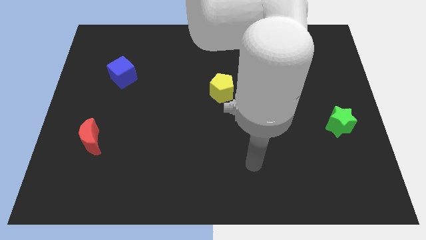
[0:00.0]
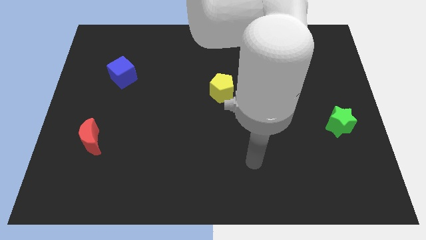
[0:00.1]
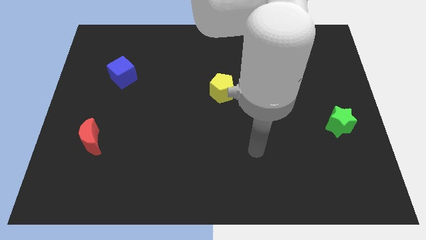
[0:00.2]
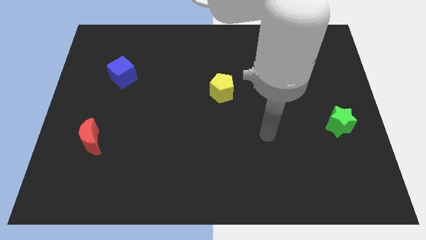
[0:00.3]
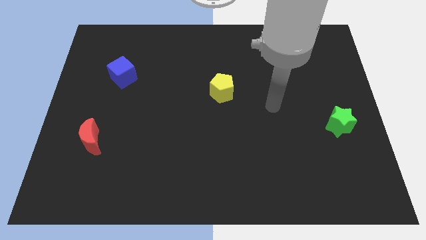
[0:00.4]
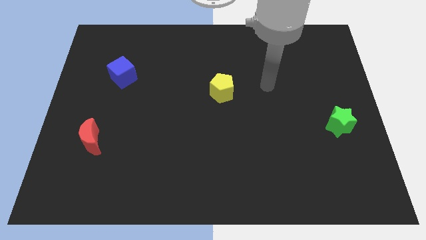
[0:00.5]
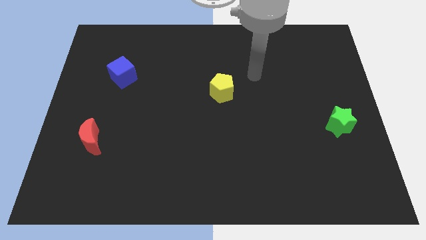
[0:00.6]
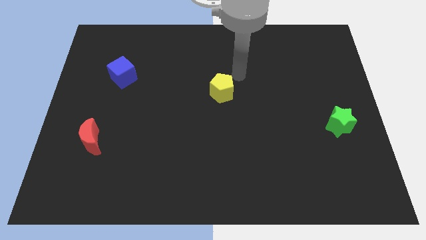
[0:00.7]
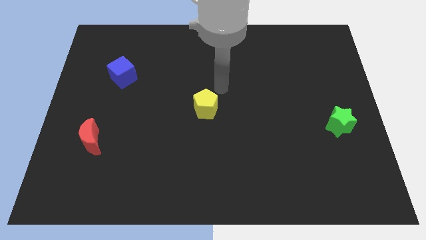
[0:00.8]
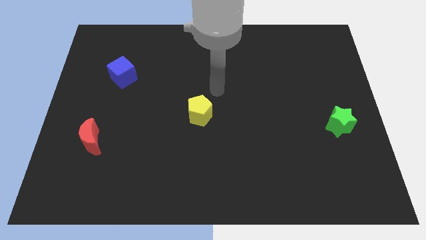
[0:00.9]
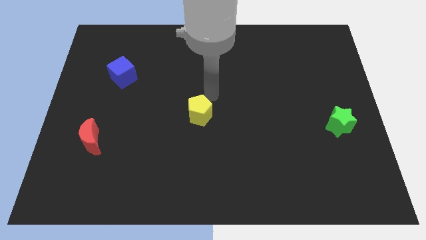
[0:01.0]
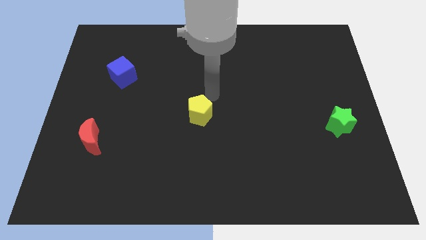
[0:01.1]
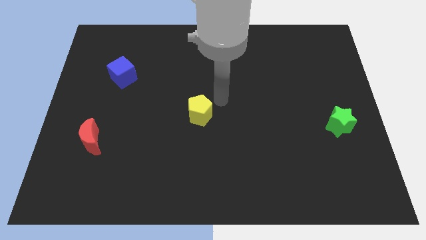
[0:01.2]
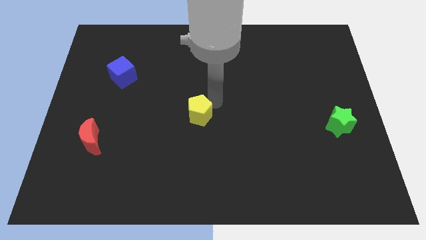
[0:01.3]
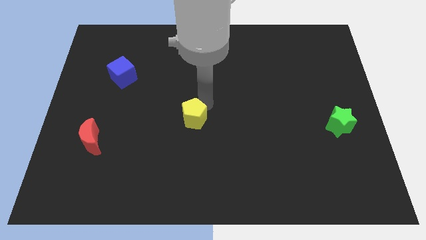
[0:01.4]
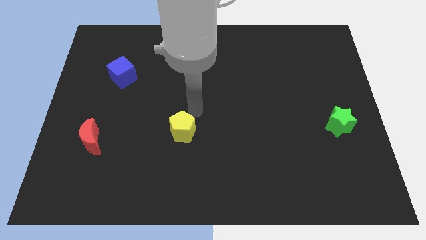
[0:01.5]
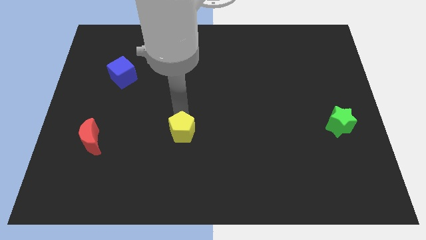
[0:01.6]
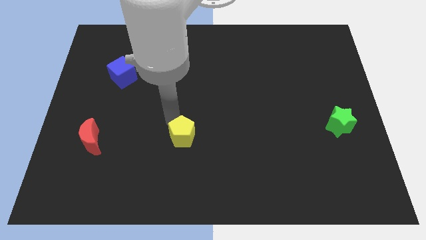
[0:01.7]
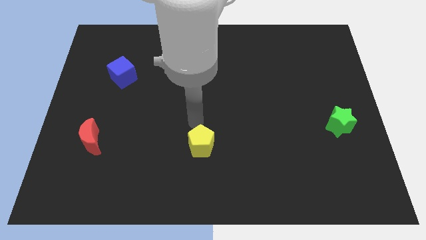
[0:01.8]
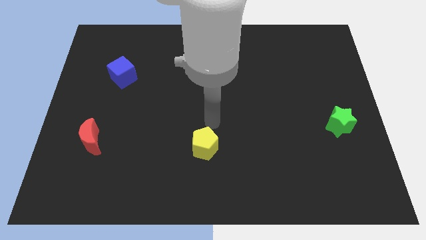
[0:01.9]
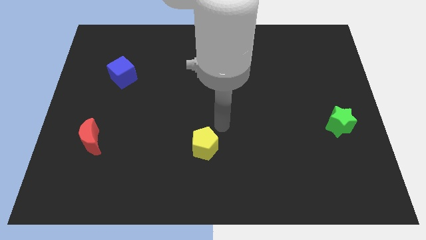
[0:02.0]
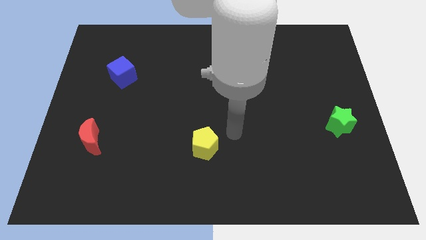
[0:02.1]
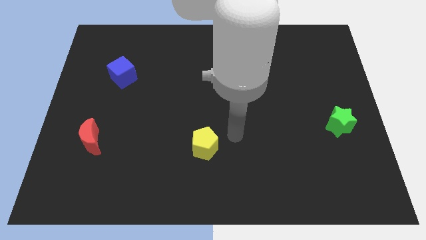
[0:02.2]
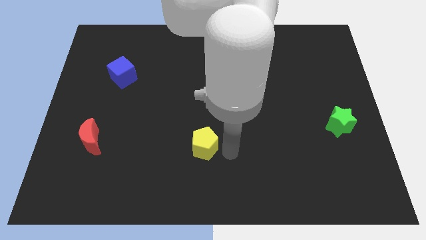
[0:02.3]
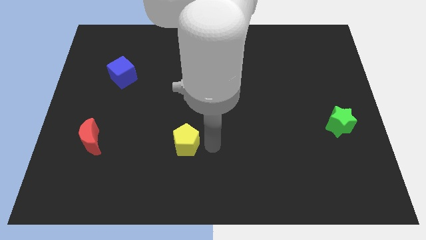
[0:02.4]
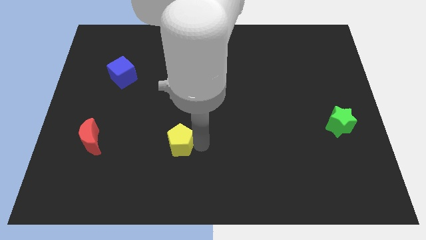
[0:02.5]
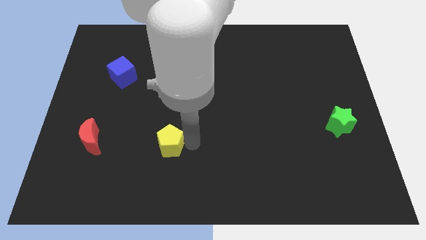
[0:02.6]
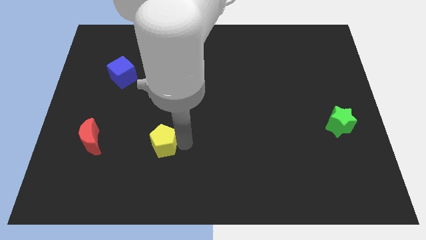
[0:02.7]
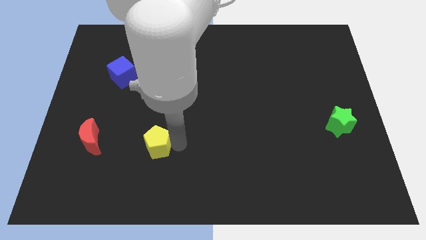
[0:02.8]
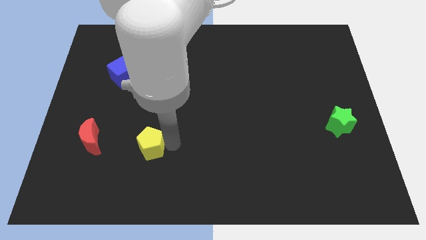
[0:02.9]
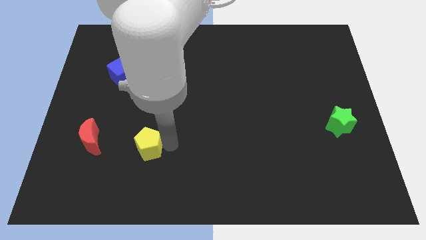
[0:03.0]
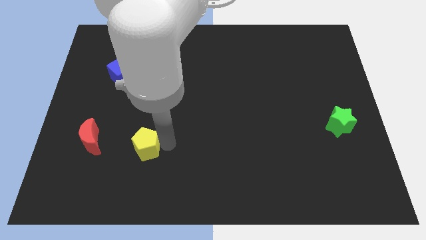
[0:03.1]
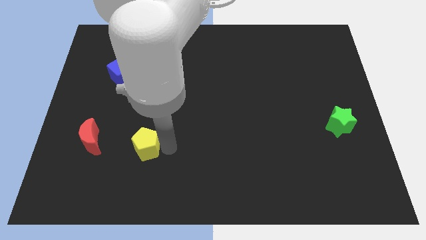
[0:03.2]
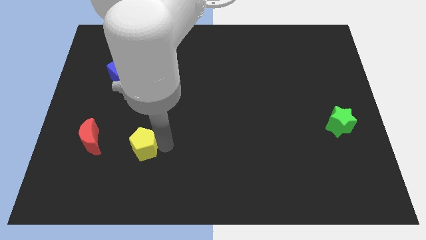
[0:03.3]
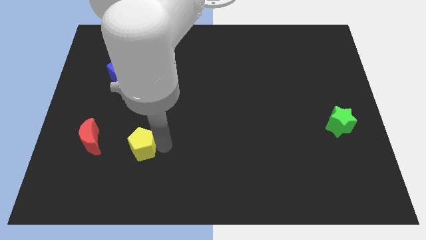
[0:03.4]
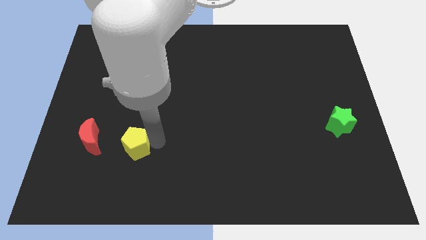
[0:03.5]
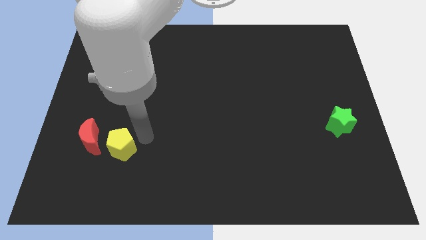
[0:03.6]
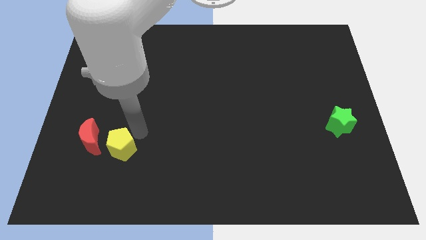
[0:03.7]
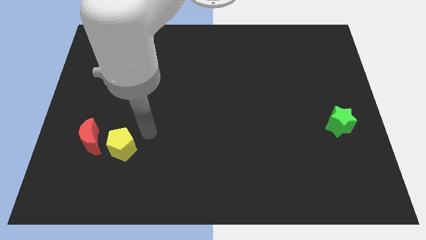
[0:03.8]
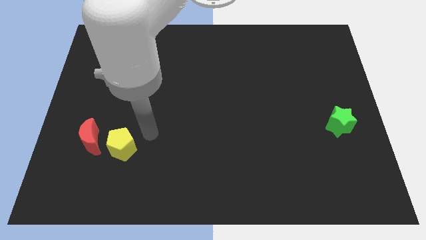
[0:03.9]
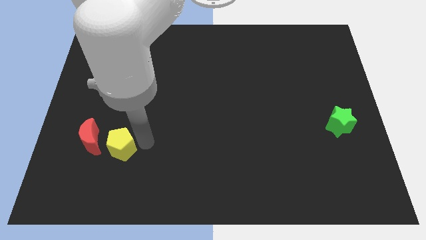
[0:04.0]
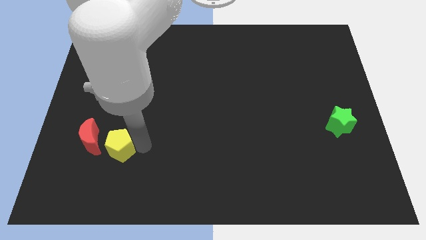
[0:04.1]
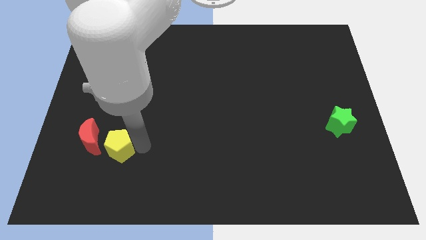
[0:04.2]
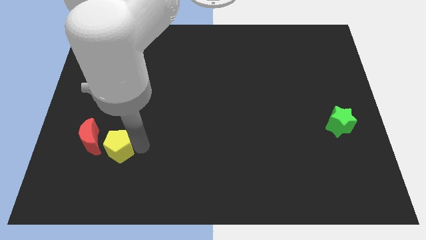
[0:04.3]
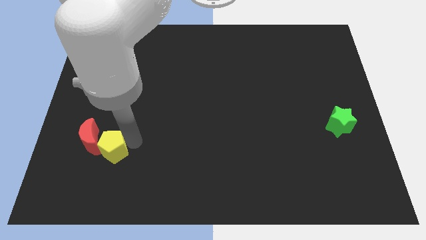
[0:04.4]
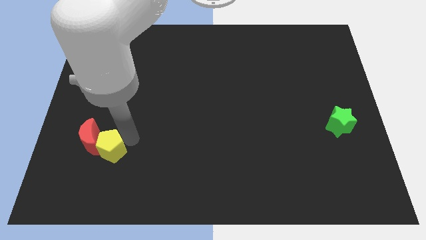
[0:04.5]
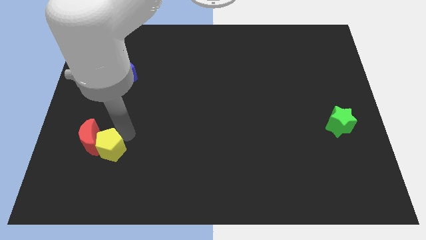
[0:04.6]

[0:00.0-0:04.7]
move the yellow block to the moon

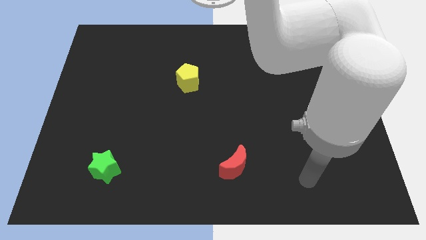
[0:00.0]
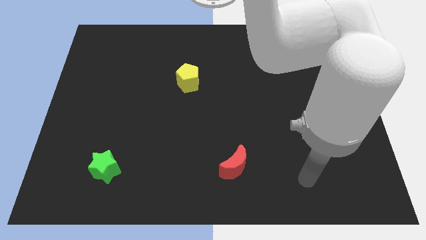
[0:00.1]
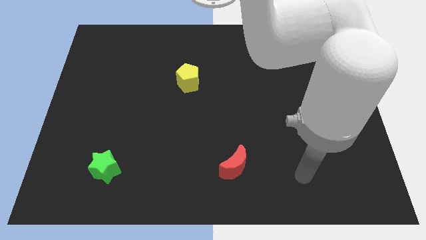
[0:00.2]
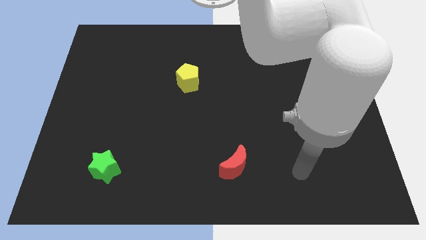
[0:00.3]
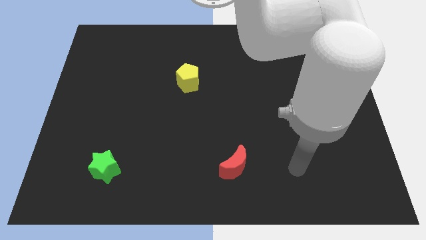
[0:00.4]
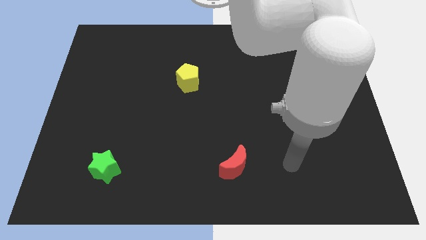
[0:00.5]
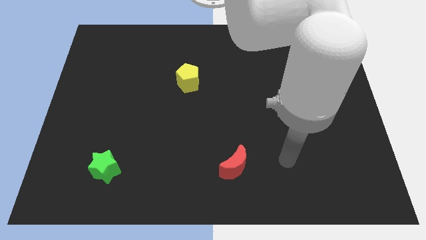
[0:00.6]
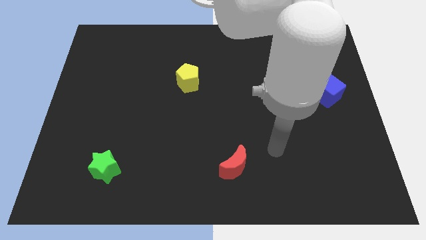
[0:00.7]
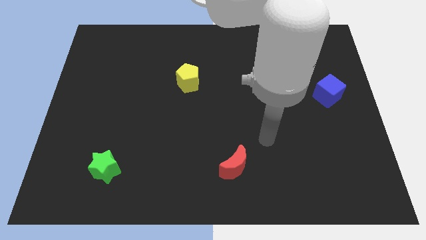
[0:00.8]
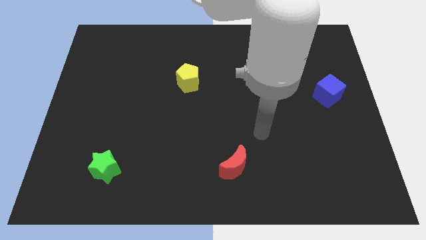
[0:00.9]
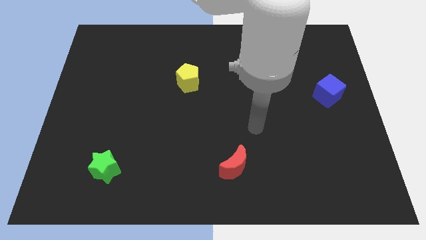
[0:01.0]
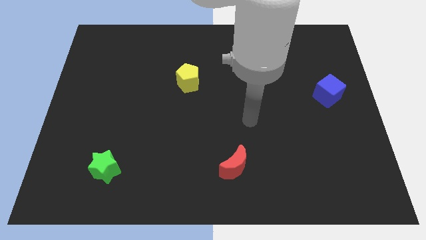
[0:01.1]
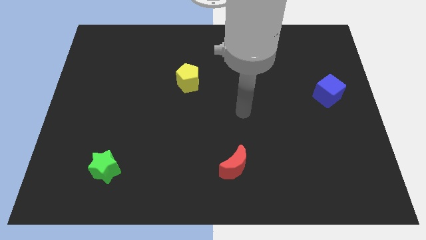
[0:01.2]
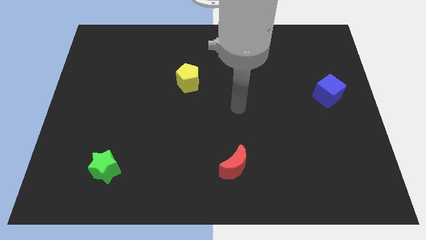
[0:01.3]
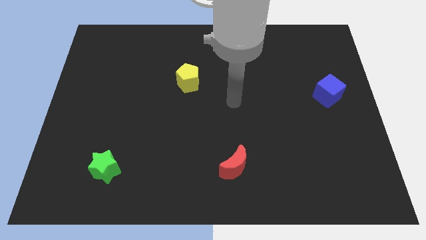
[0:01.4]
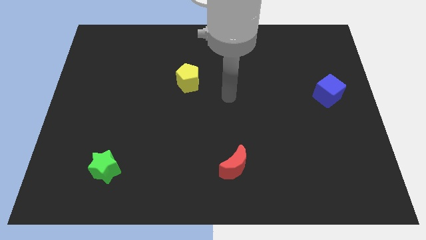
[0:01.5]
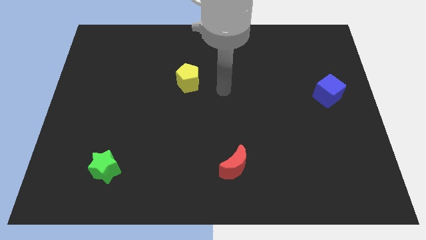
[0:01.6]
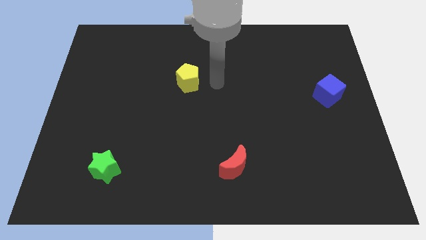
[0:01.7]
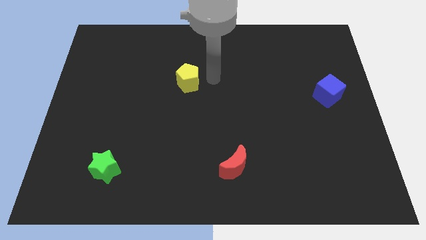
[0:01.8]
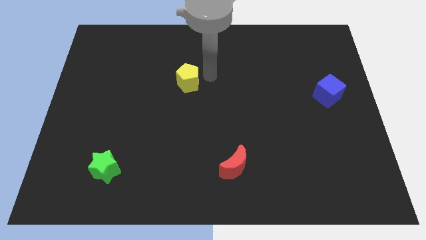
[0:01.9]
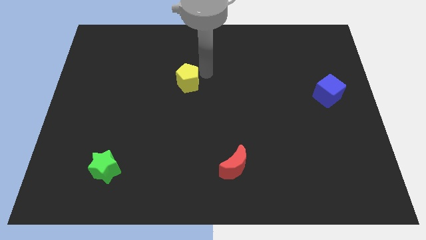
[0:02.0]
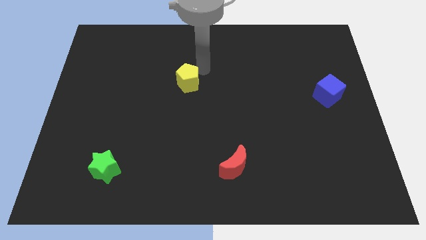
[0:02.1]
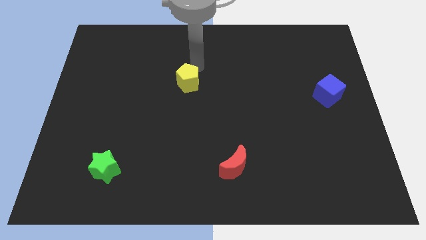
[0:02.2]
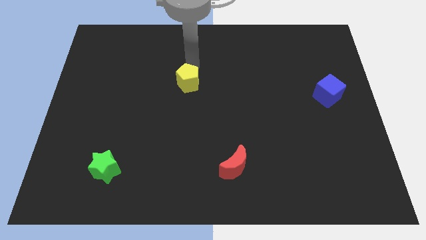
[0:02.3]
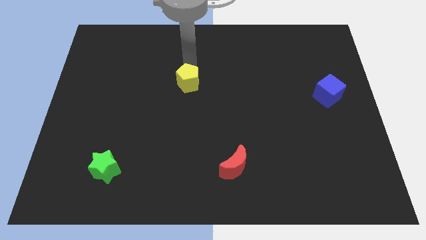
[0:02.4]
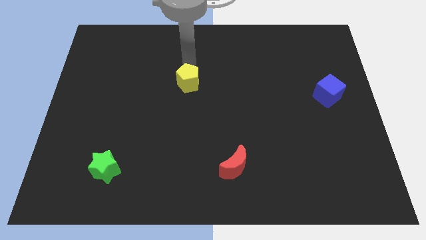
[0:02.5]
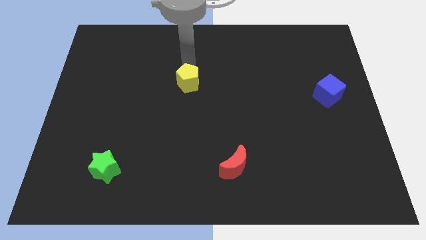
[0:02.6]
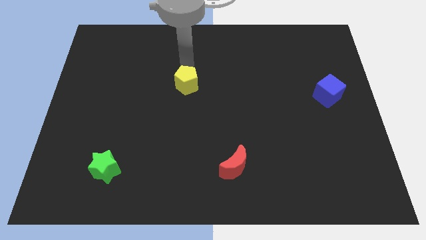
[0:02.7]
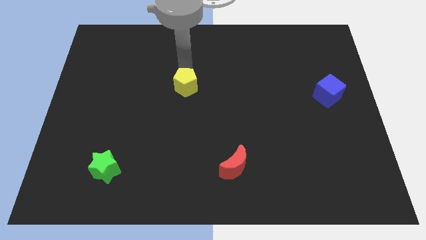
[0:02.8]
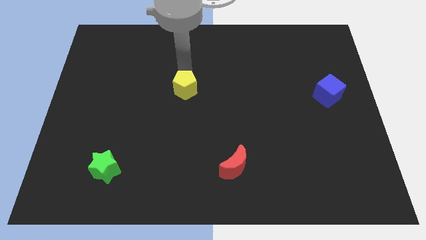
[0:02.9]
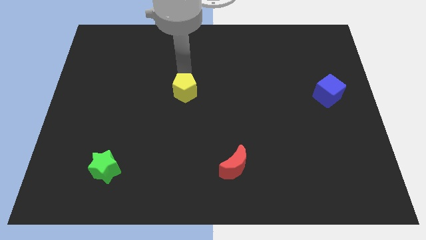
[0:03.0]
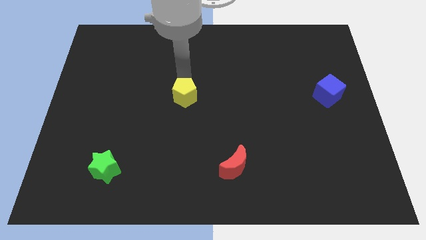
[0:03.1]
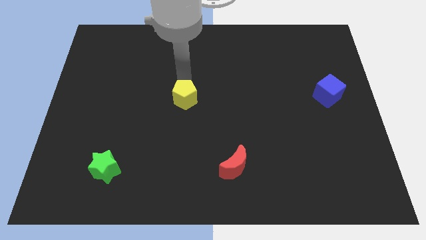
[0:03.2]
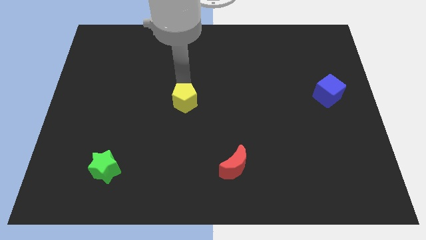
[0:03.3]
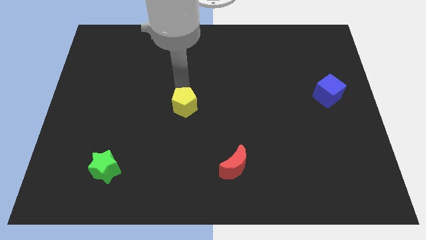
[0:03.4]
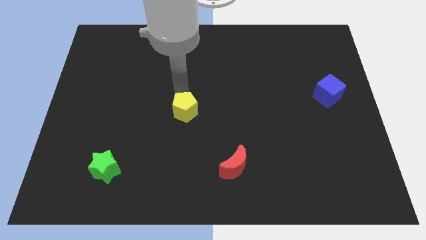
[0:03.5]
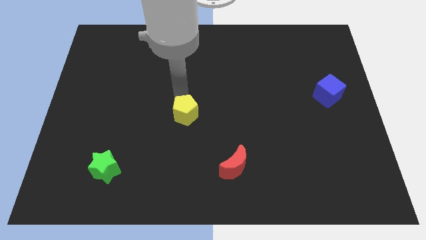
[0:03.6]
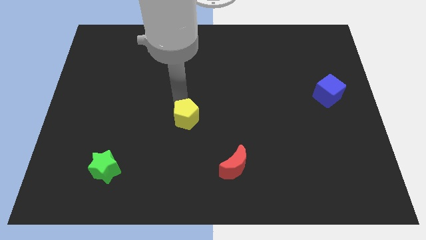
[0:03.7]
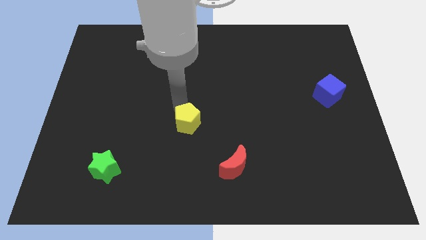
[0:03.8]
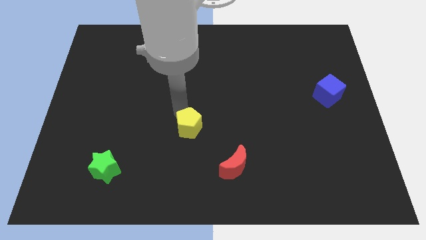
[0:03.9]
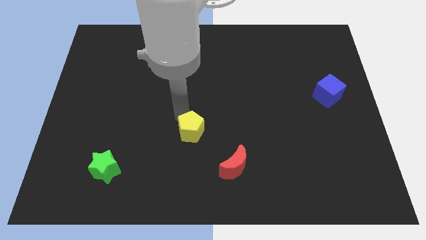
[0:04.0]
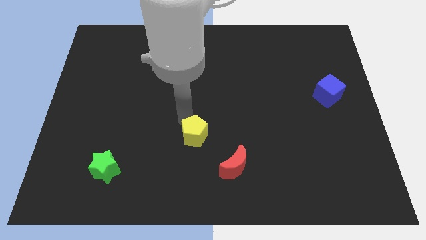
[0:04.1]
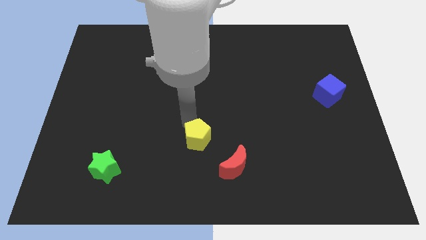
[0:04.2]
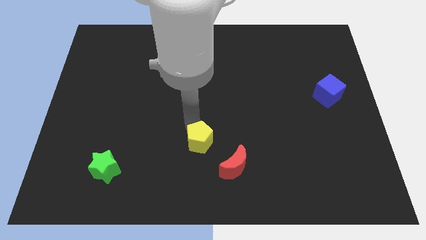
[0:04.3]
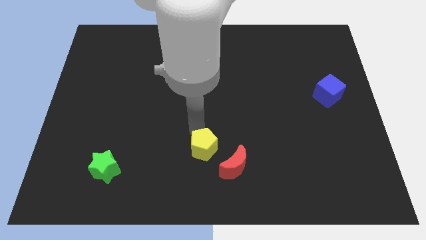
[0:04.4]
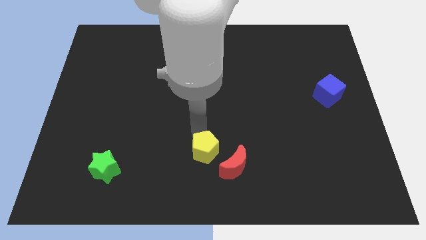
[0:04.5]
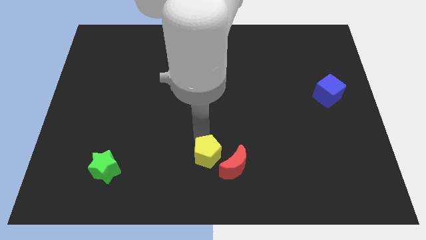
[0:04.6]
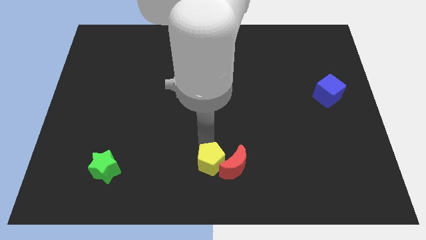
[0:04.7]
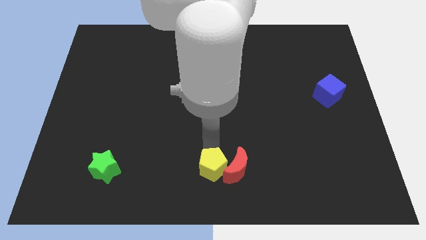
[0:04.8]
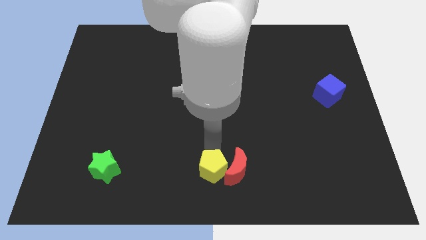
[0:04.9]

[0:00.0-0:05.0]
move the yellow block to the red moon
